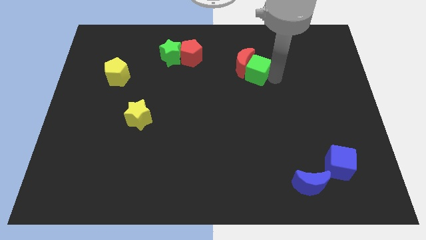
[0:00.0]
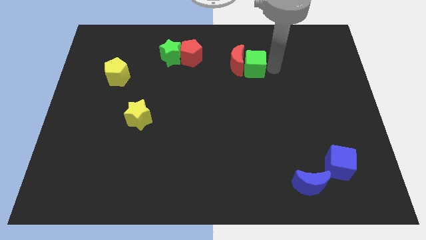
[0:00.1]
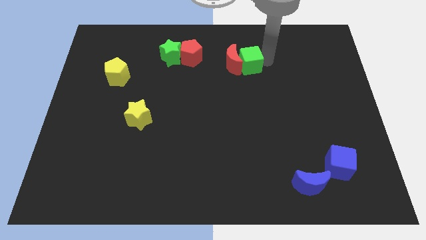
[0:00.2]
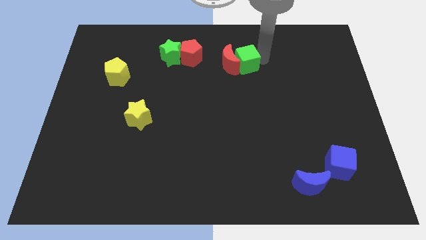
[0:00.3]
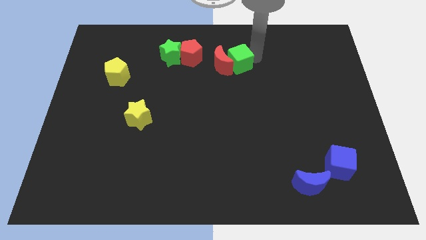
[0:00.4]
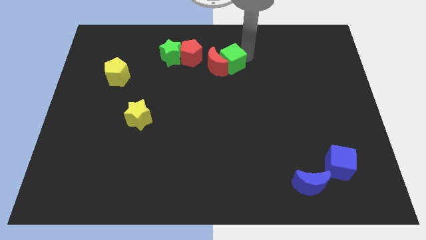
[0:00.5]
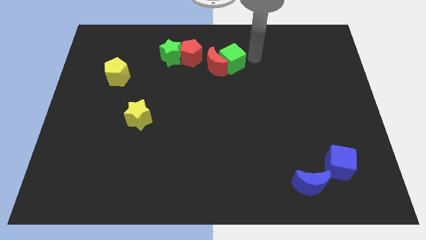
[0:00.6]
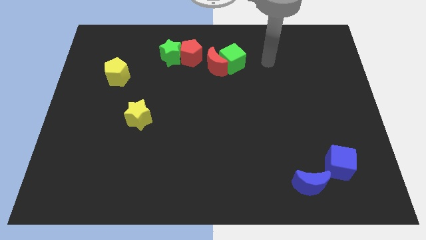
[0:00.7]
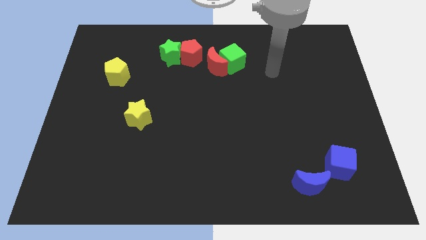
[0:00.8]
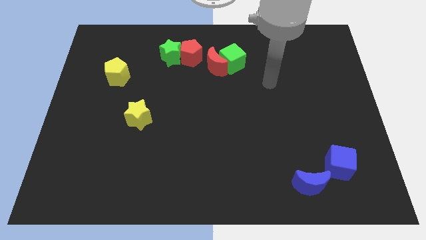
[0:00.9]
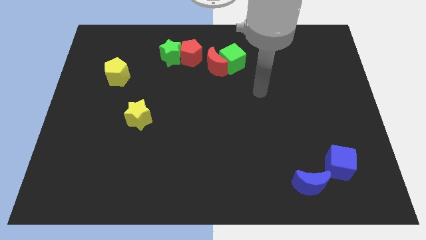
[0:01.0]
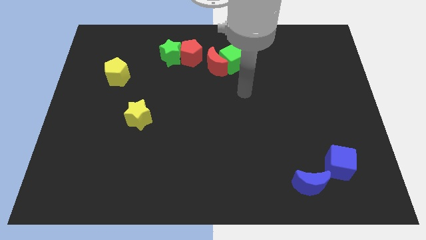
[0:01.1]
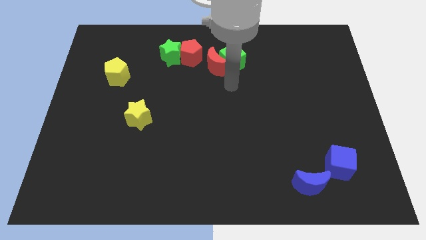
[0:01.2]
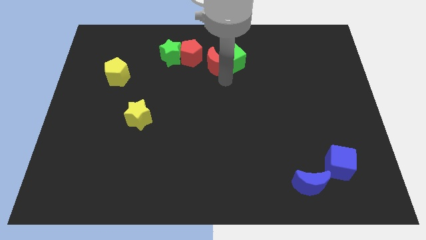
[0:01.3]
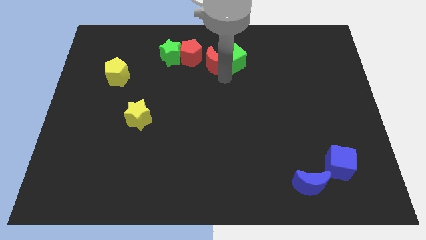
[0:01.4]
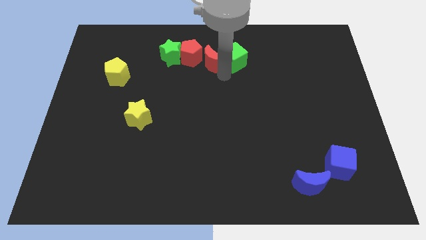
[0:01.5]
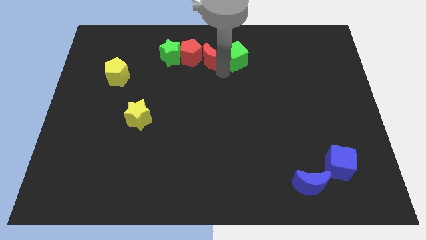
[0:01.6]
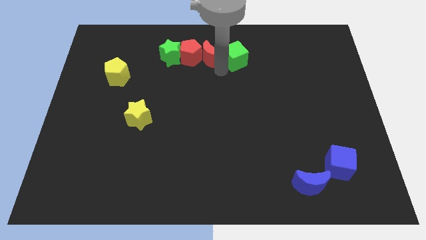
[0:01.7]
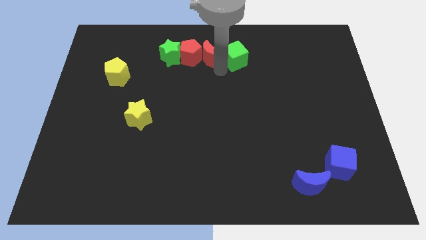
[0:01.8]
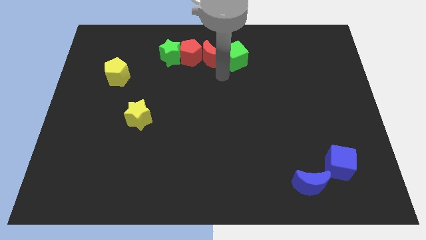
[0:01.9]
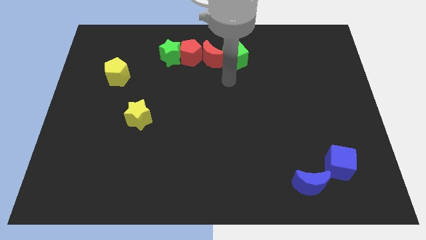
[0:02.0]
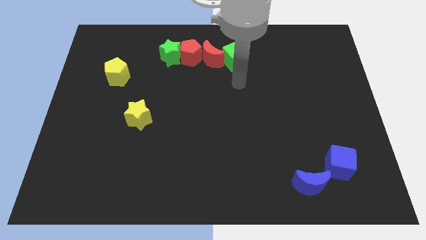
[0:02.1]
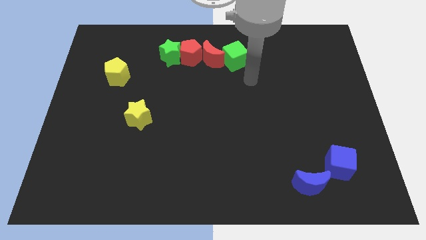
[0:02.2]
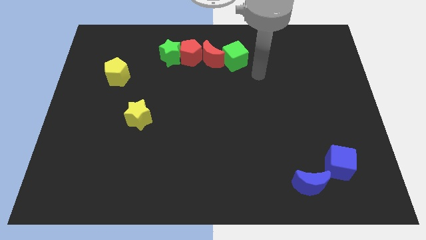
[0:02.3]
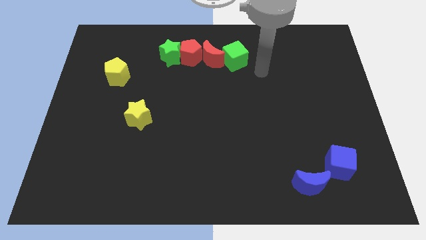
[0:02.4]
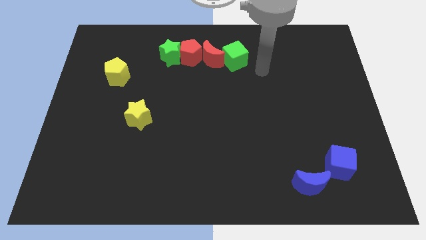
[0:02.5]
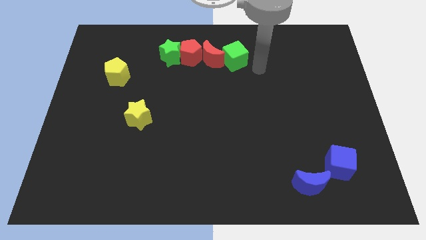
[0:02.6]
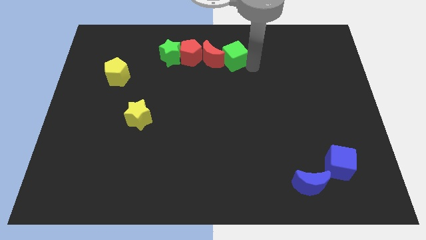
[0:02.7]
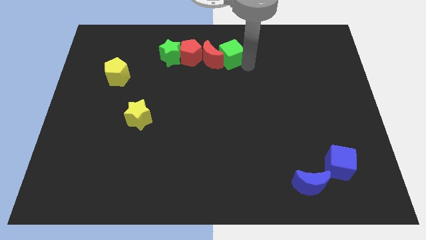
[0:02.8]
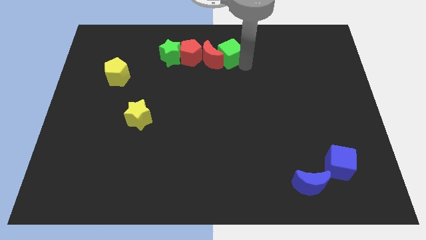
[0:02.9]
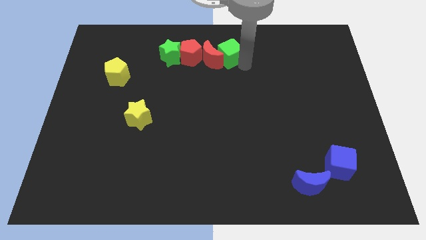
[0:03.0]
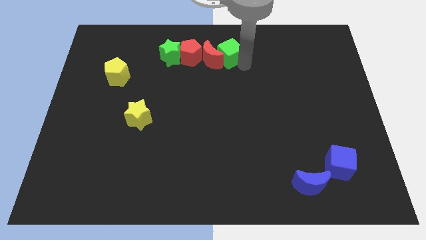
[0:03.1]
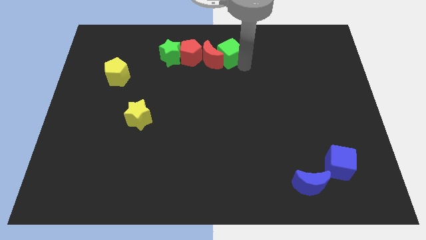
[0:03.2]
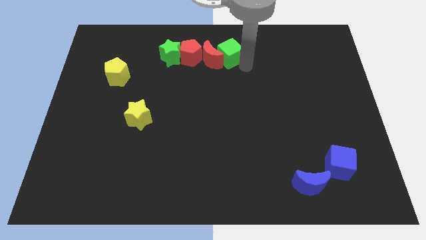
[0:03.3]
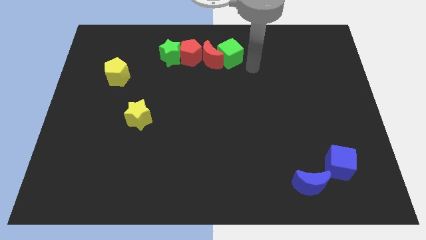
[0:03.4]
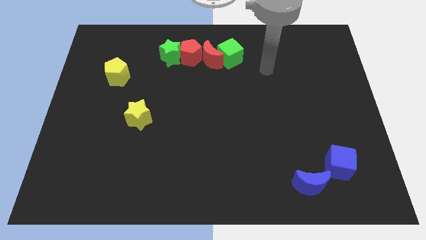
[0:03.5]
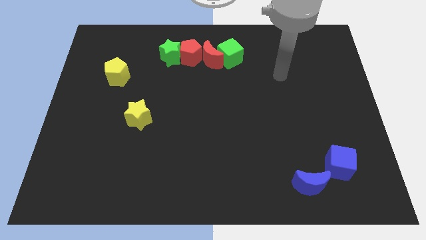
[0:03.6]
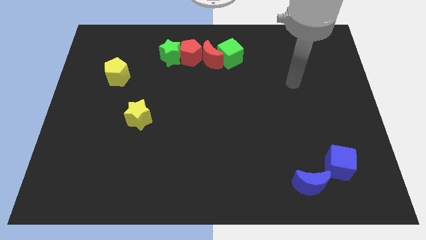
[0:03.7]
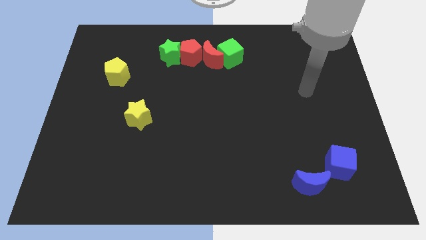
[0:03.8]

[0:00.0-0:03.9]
move the green cube and the red moon to the right side of the red pentagon

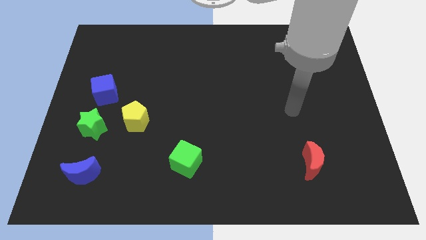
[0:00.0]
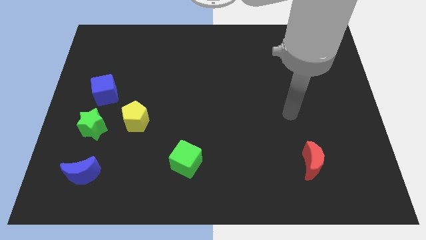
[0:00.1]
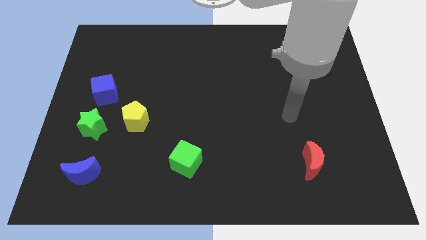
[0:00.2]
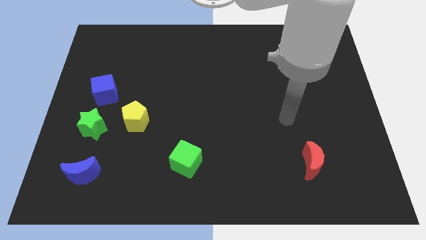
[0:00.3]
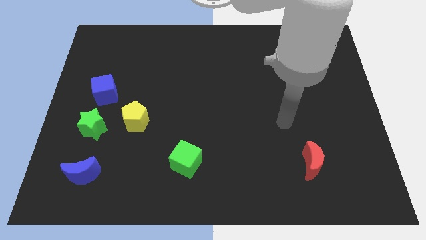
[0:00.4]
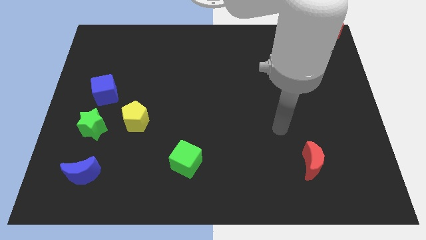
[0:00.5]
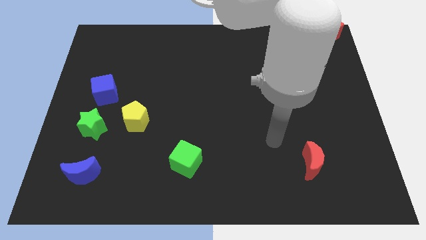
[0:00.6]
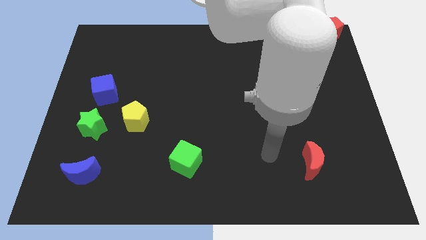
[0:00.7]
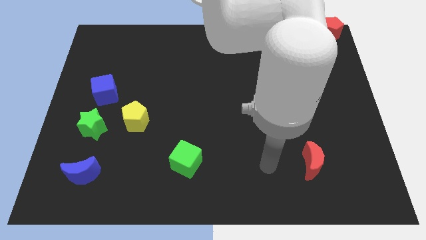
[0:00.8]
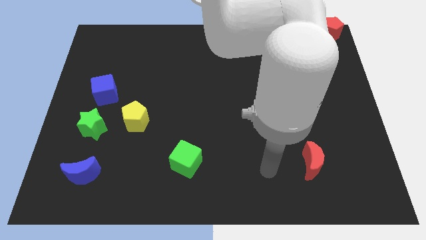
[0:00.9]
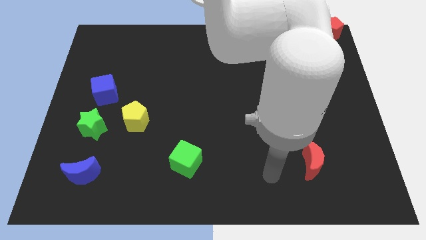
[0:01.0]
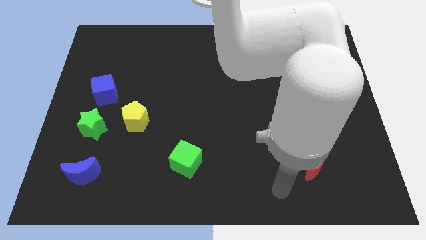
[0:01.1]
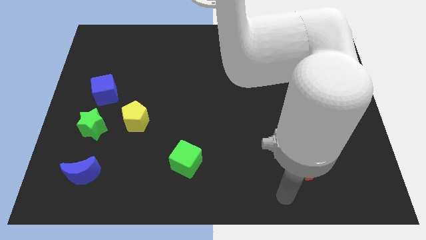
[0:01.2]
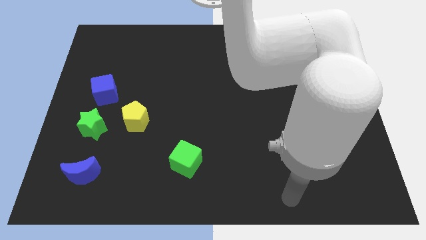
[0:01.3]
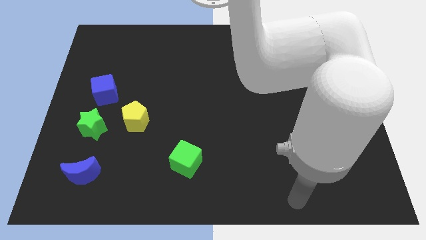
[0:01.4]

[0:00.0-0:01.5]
move your hand to bottom side of the board

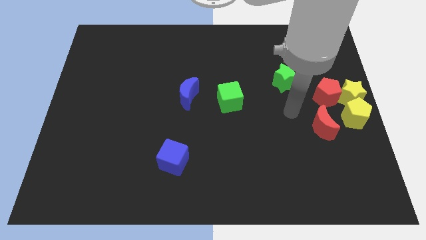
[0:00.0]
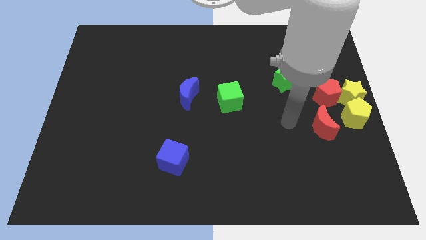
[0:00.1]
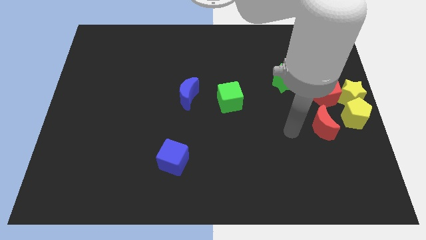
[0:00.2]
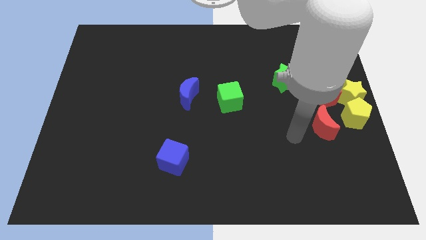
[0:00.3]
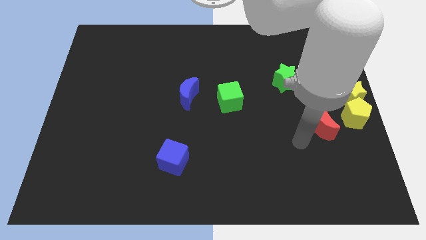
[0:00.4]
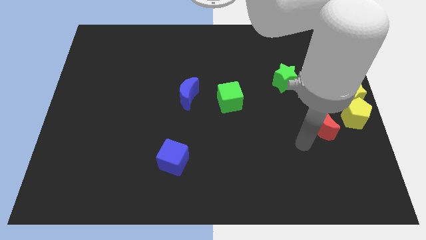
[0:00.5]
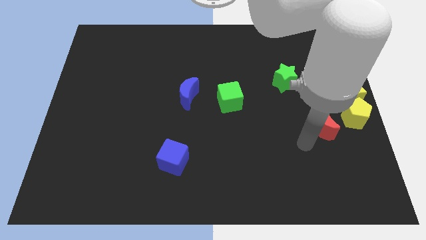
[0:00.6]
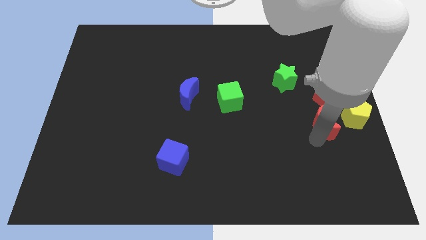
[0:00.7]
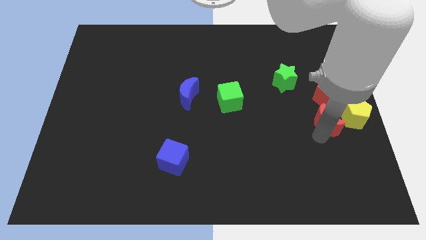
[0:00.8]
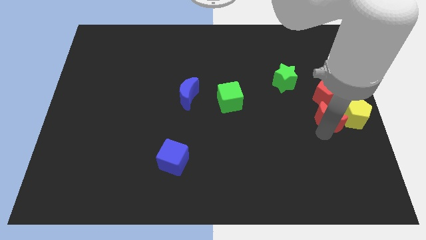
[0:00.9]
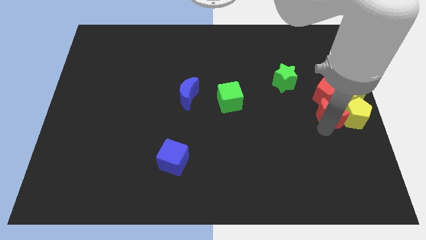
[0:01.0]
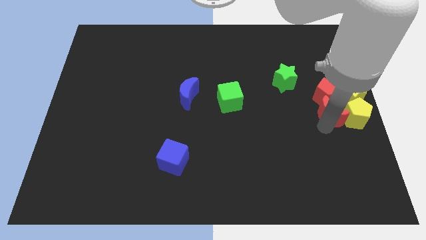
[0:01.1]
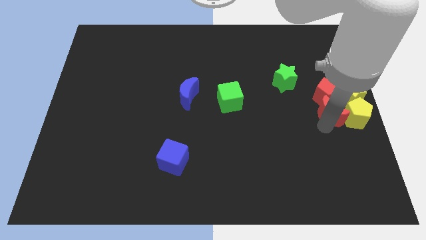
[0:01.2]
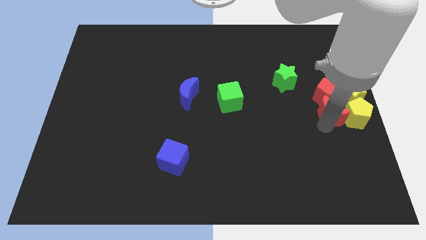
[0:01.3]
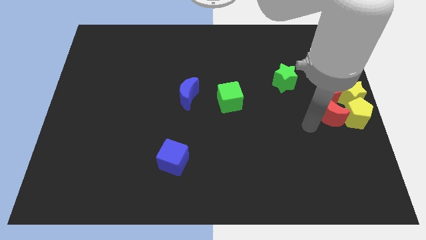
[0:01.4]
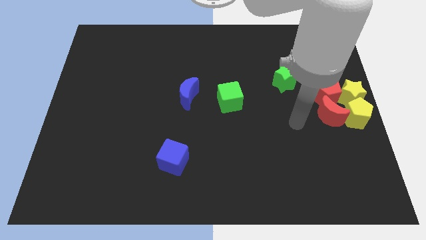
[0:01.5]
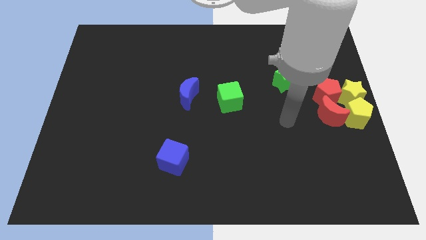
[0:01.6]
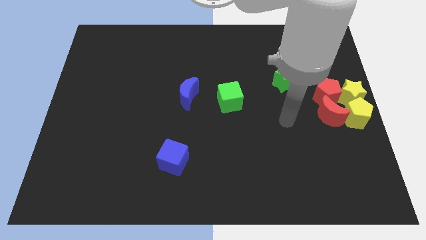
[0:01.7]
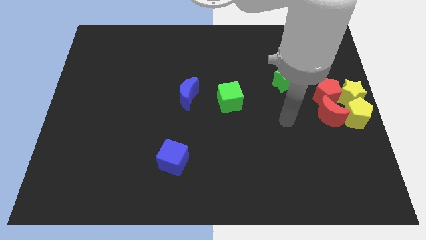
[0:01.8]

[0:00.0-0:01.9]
push the red moon into the red and the yellow pentagon

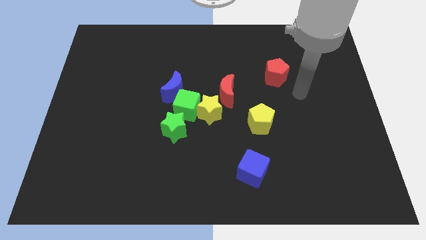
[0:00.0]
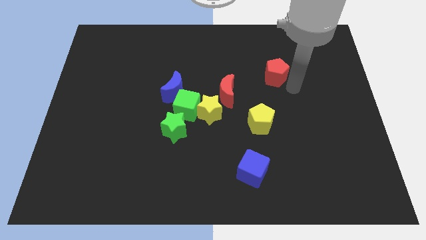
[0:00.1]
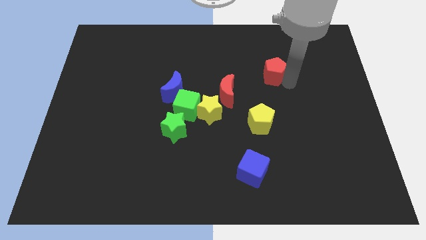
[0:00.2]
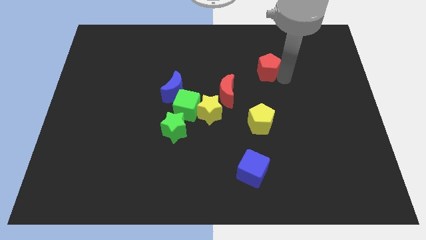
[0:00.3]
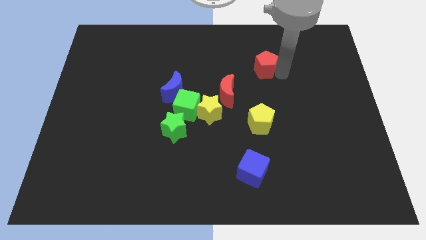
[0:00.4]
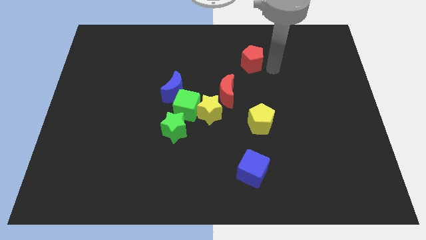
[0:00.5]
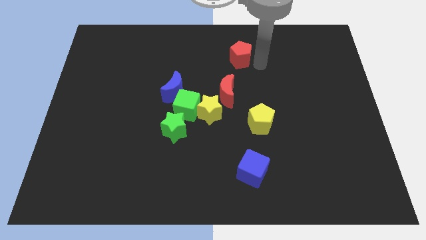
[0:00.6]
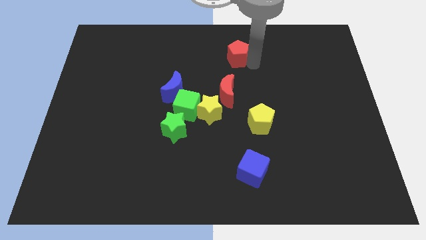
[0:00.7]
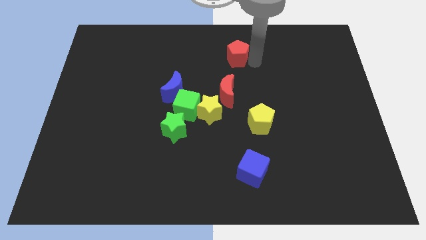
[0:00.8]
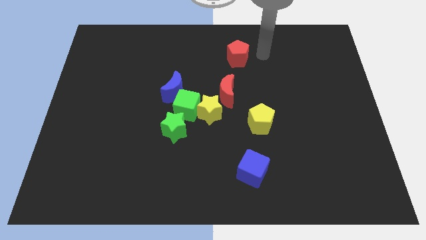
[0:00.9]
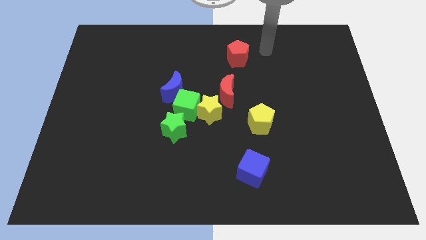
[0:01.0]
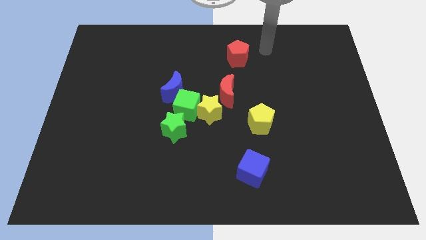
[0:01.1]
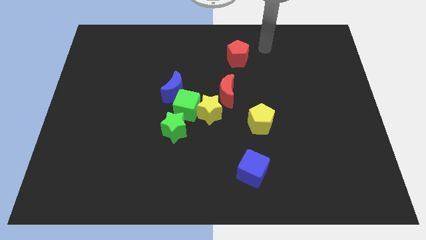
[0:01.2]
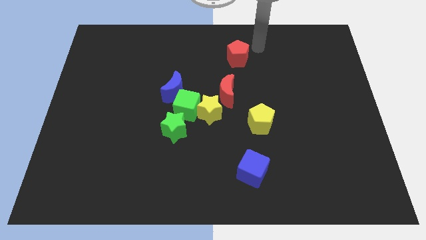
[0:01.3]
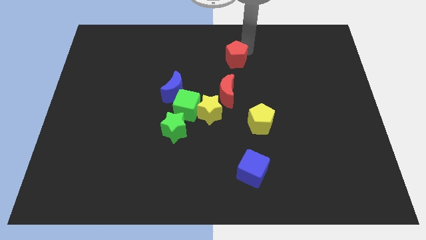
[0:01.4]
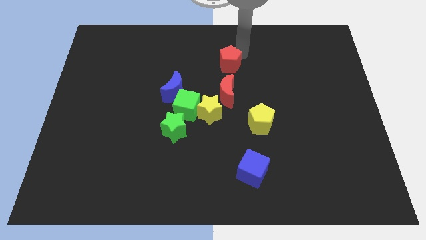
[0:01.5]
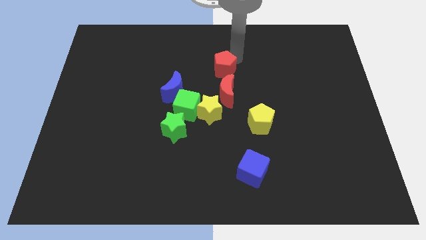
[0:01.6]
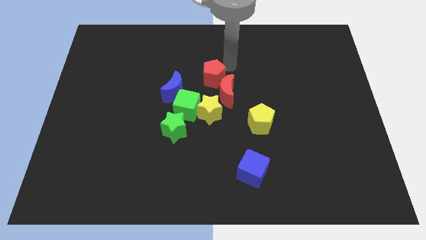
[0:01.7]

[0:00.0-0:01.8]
put the red pentagon above the red moon
